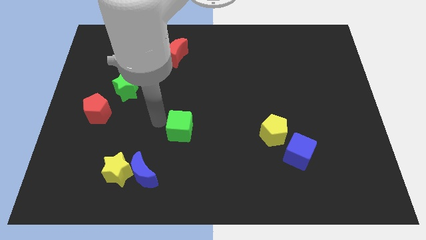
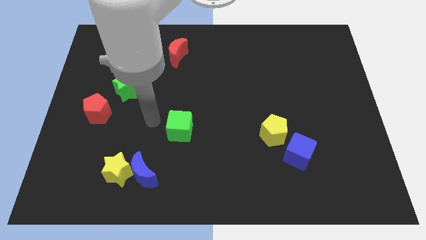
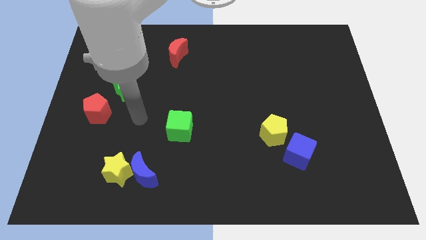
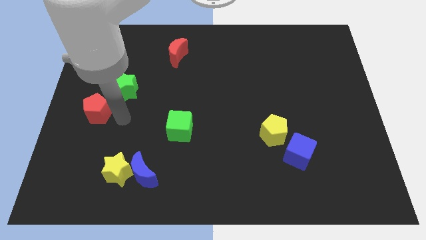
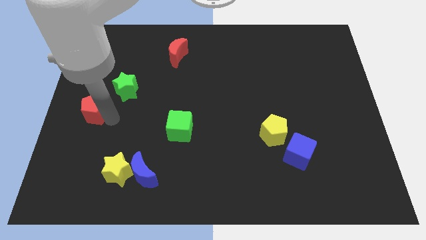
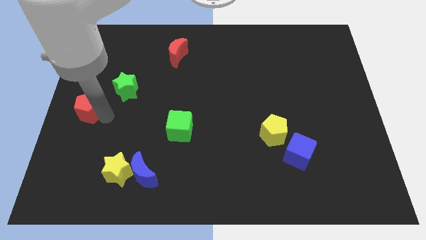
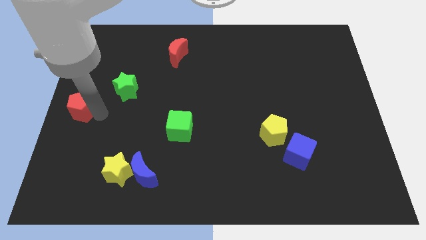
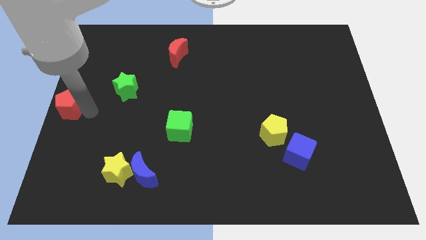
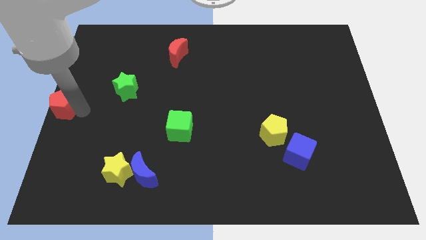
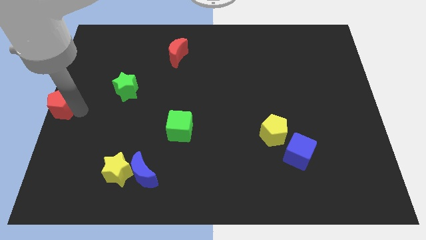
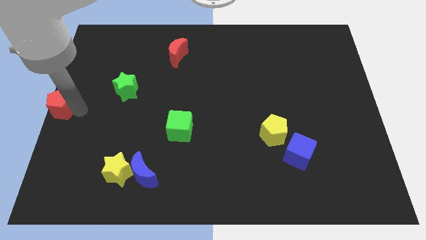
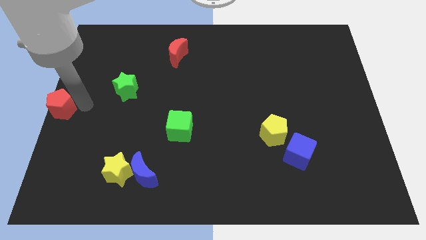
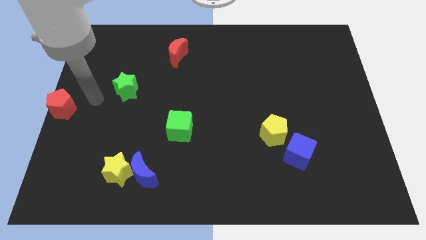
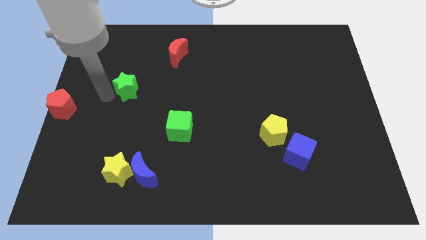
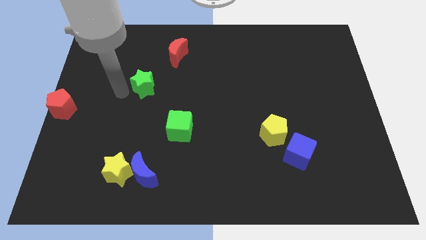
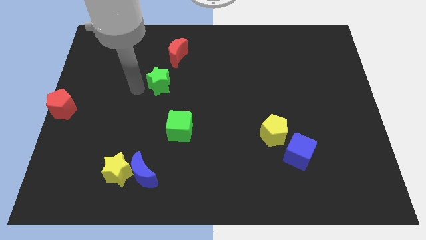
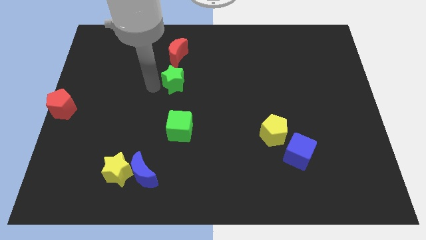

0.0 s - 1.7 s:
place the green star down to the red moon

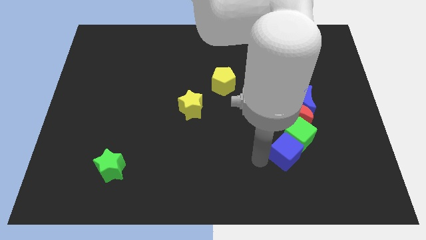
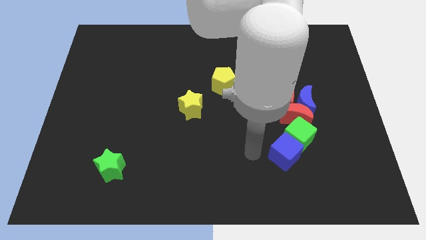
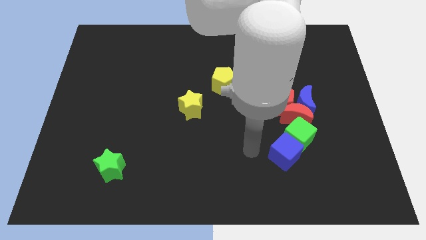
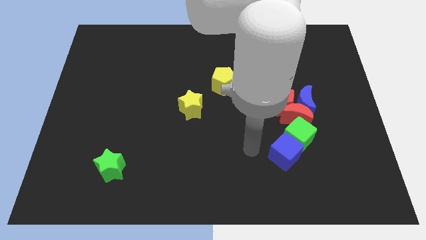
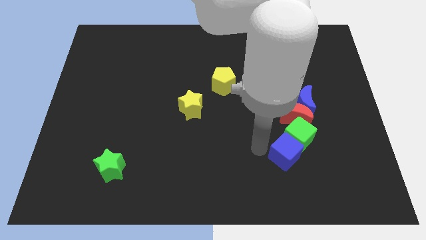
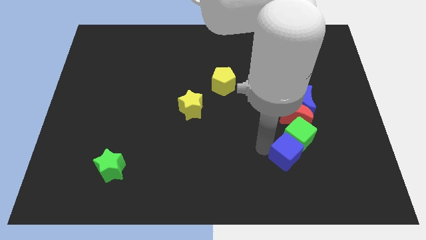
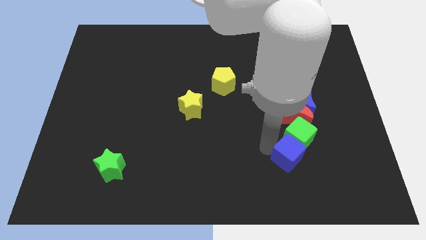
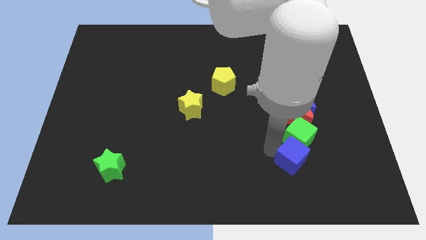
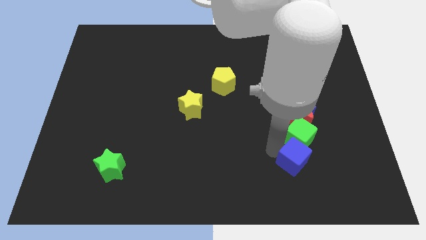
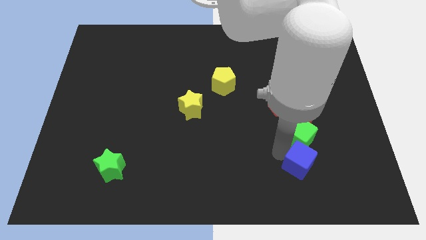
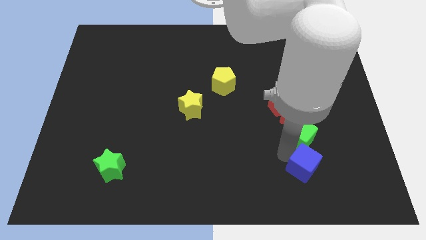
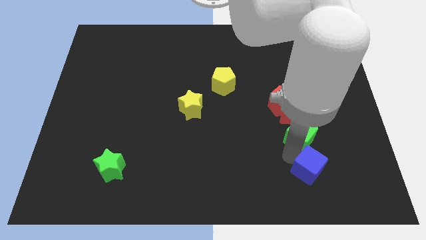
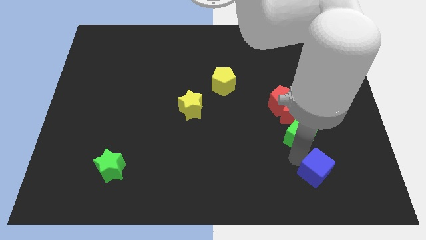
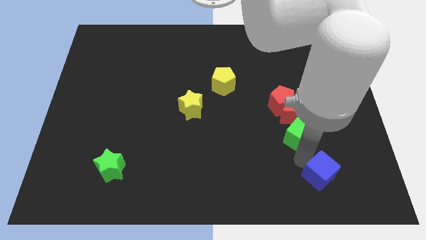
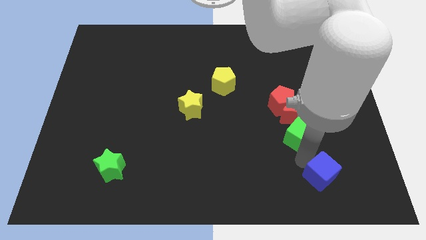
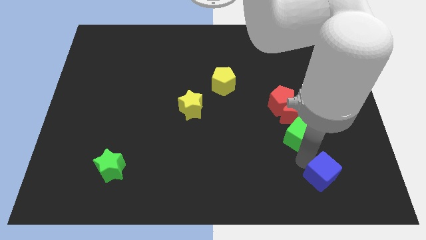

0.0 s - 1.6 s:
push the blue cube towards the bottom right corner of the board

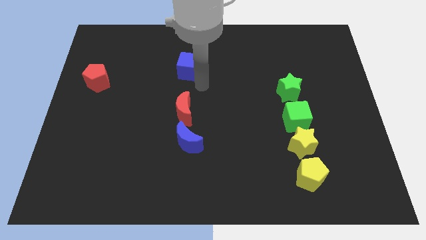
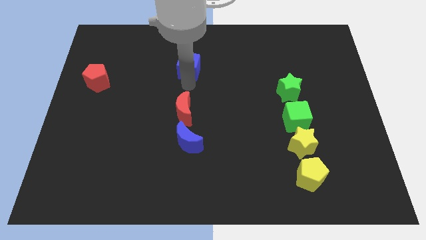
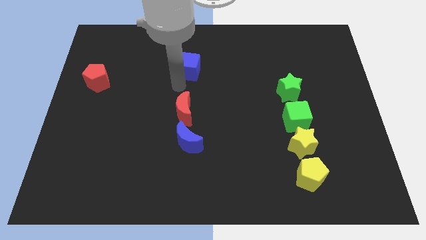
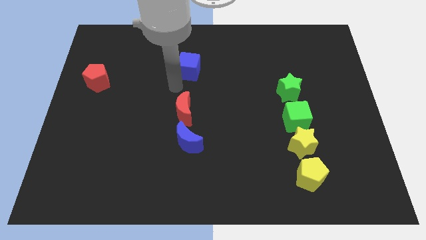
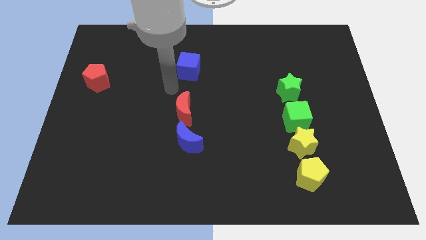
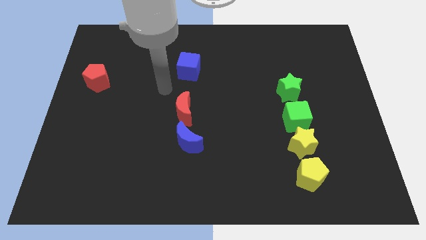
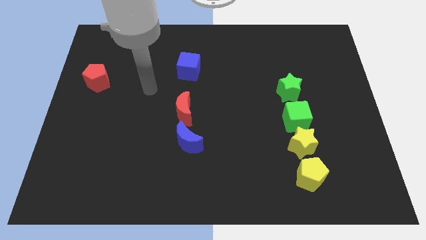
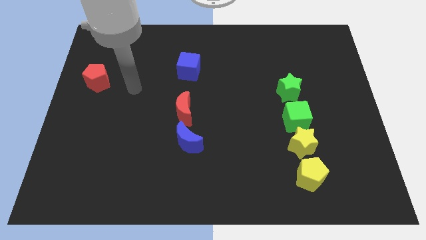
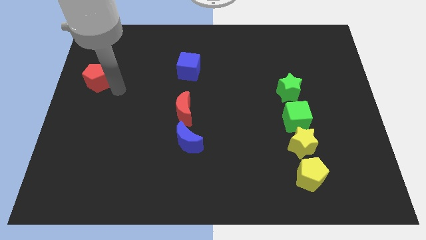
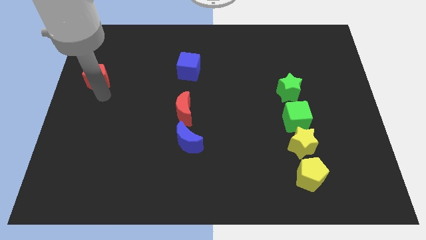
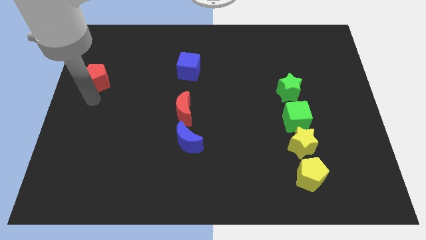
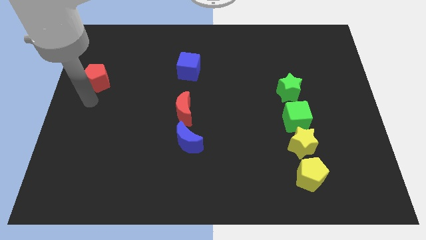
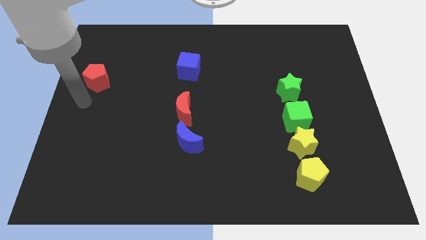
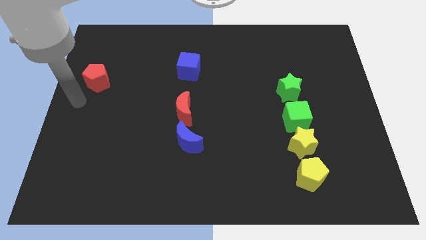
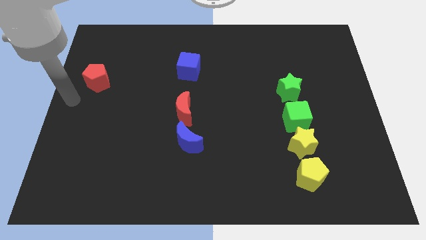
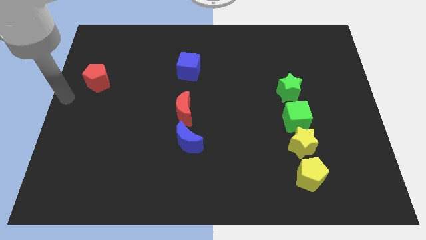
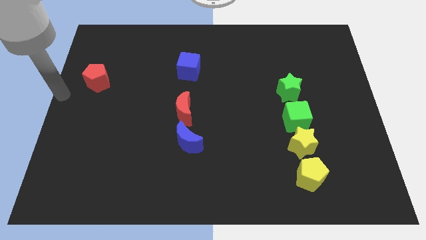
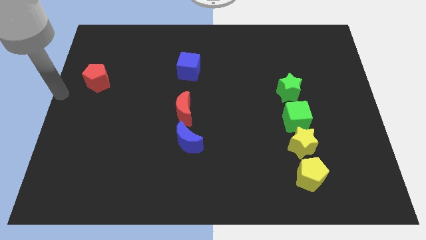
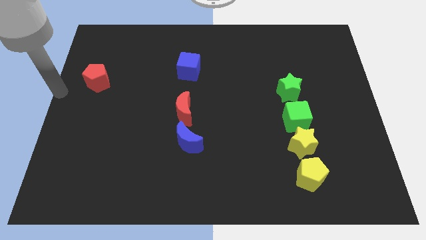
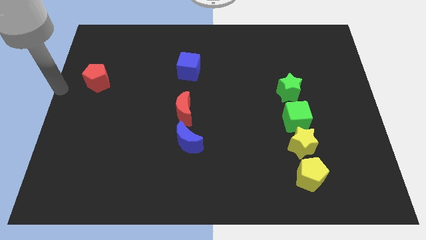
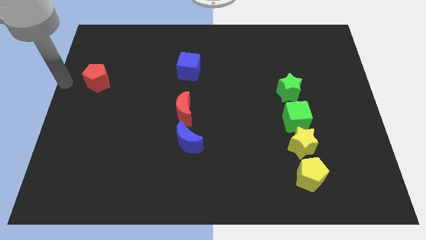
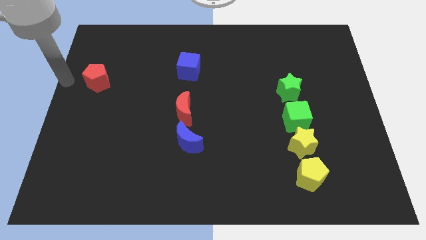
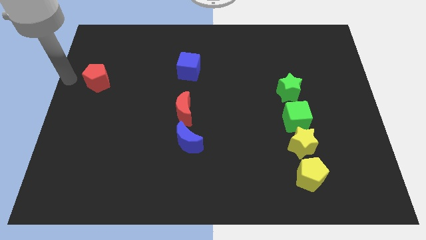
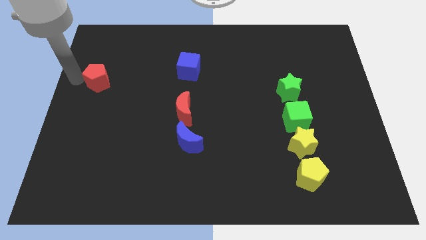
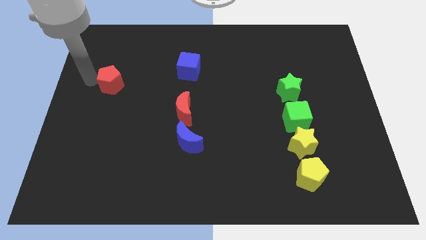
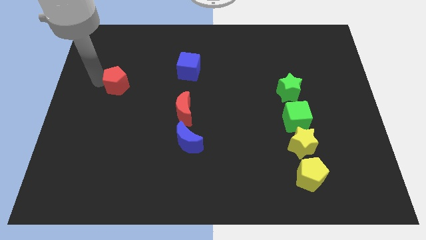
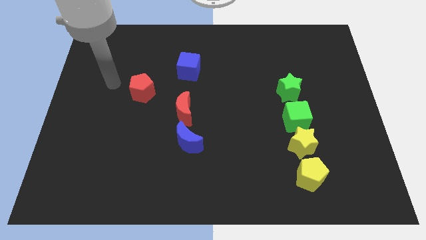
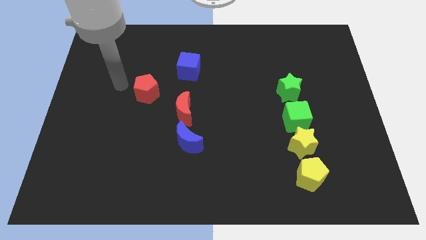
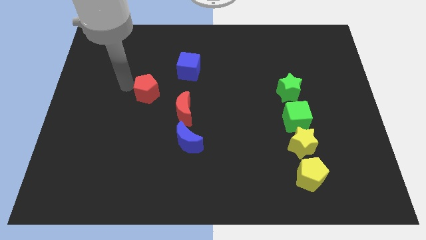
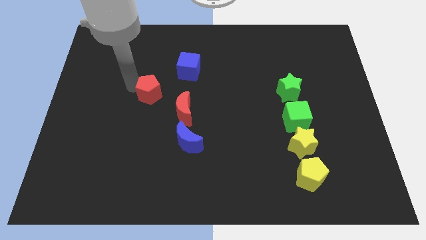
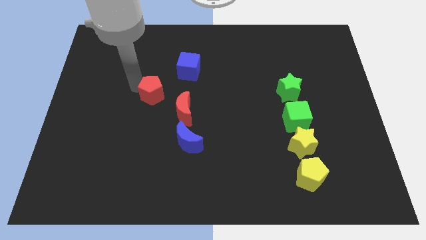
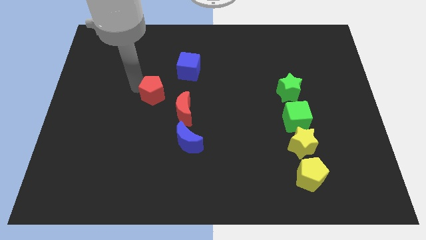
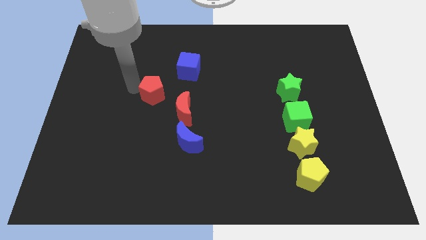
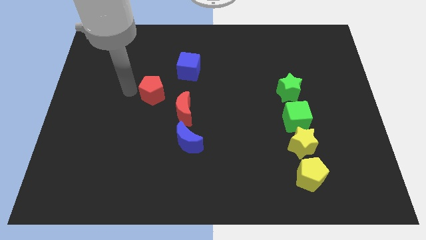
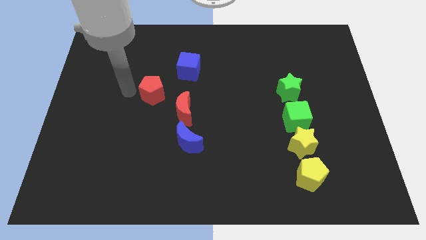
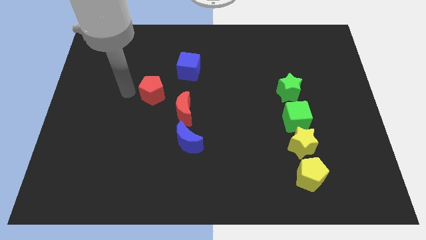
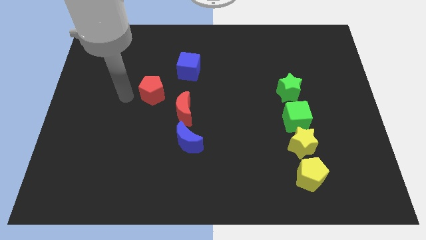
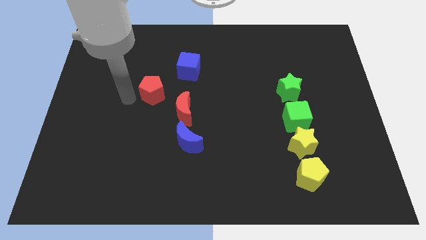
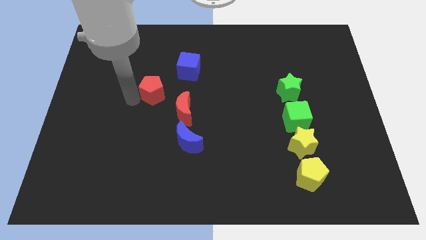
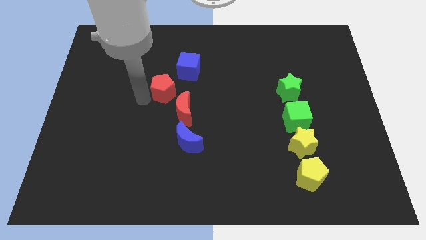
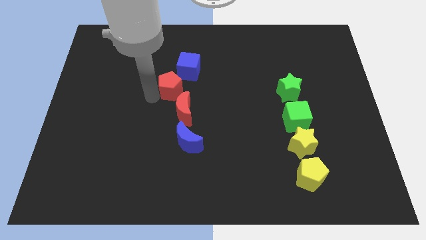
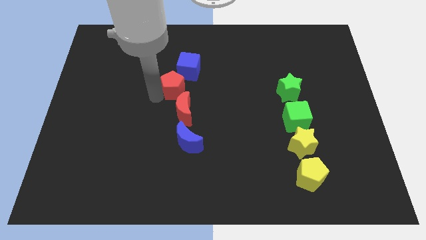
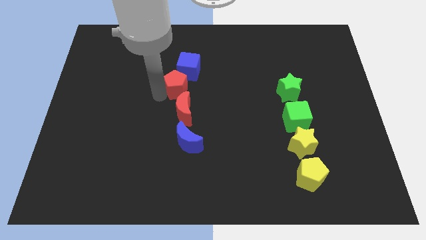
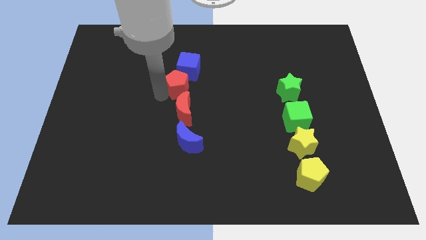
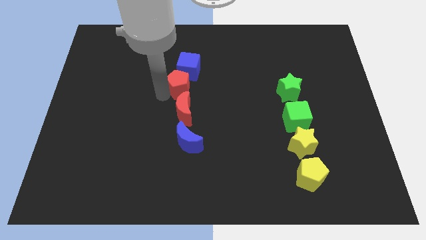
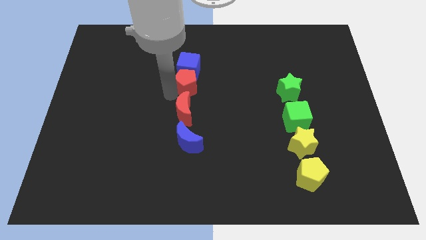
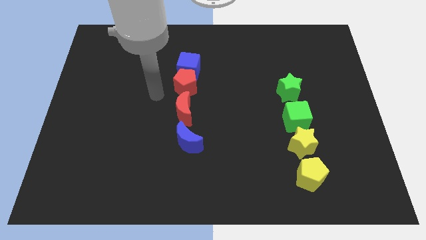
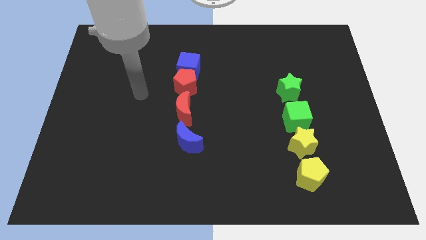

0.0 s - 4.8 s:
place the red pentagon above the red moon

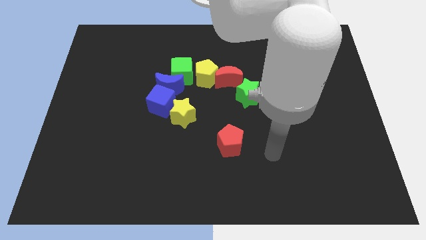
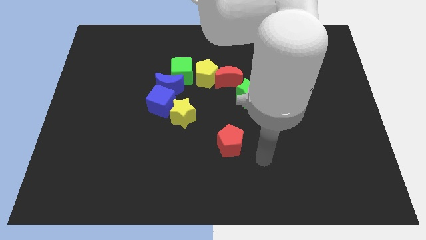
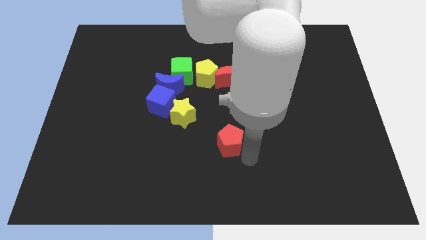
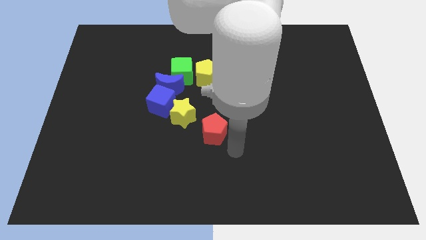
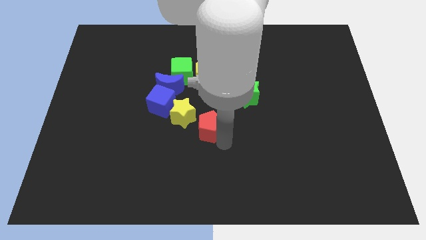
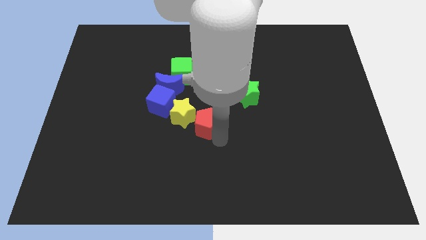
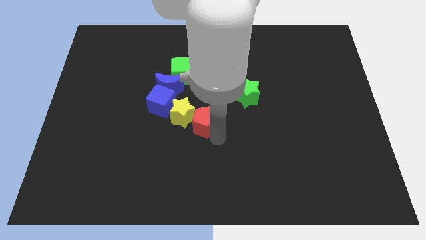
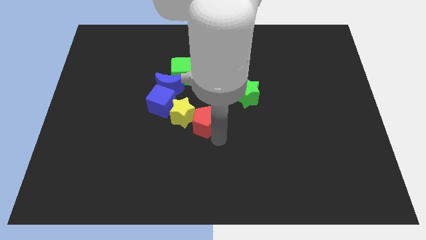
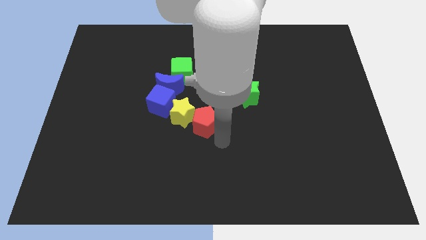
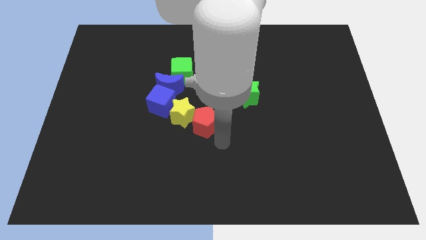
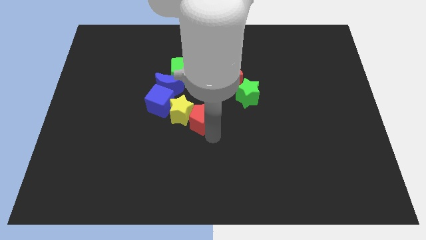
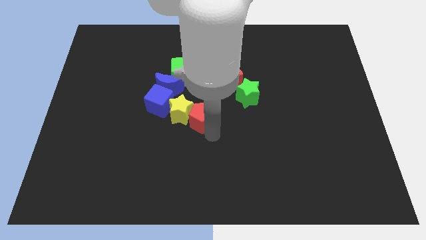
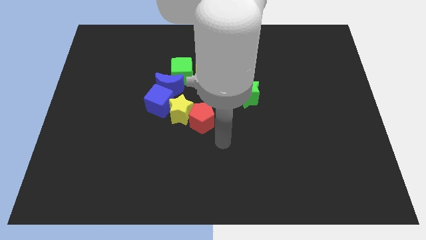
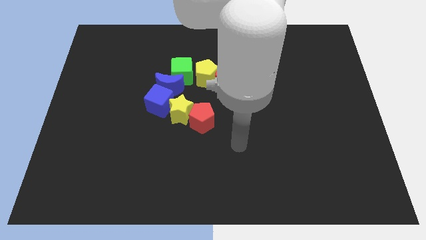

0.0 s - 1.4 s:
push the red pentagon right side of the yellow star
